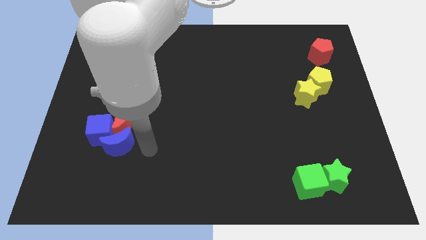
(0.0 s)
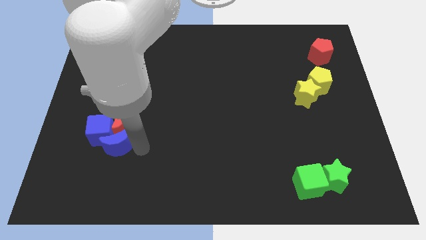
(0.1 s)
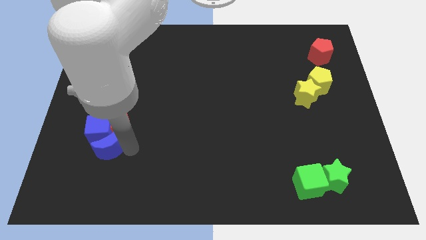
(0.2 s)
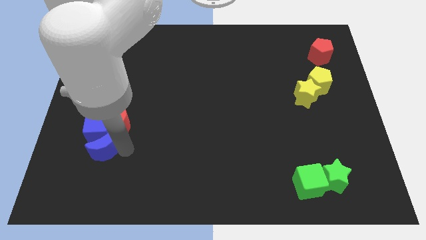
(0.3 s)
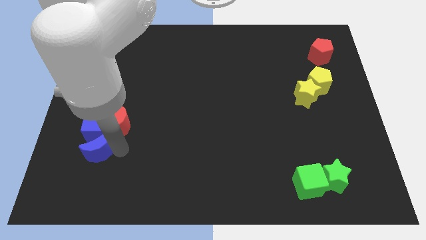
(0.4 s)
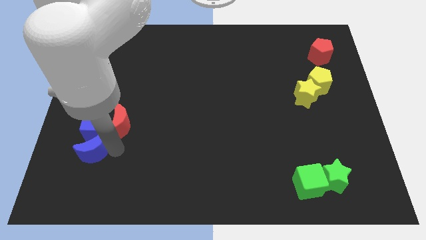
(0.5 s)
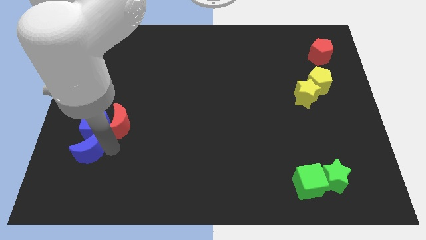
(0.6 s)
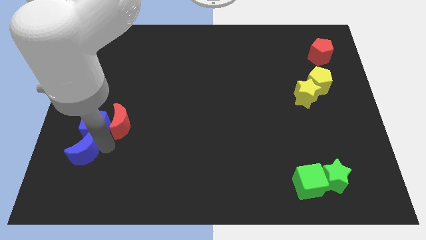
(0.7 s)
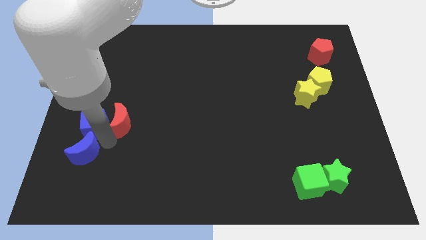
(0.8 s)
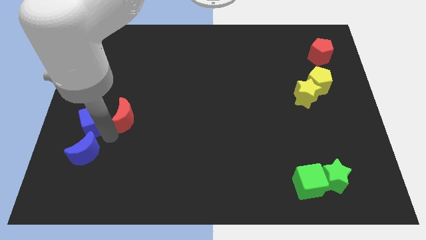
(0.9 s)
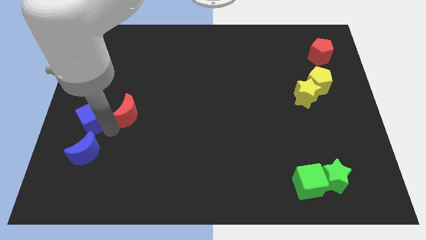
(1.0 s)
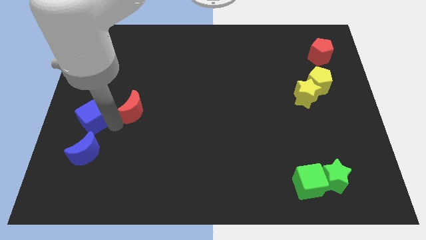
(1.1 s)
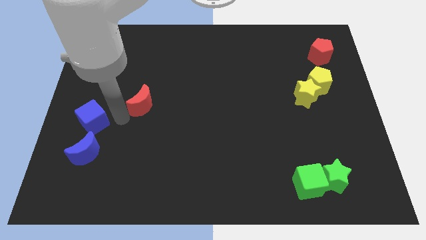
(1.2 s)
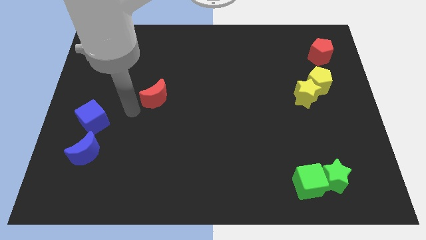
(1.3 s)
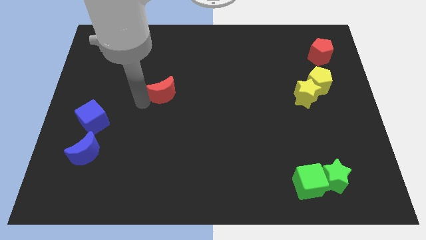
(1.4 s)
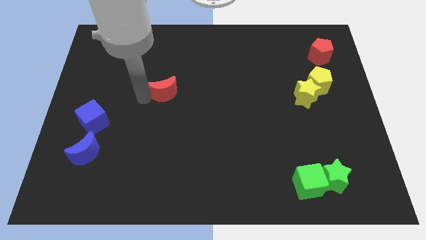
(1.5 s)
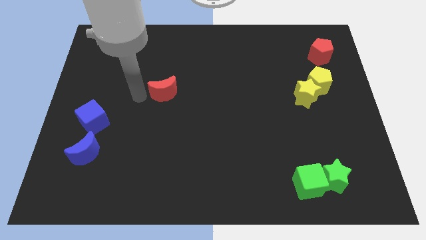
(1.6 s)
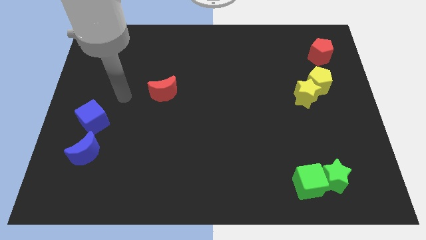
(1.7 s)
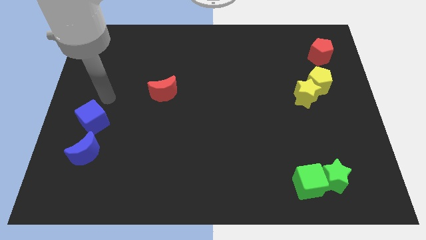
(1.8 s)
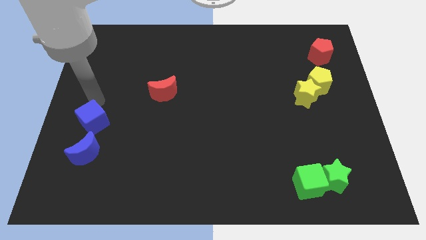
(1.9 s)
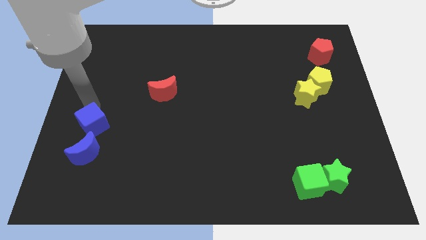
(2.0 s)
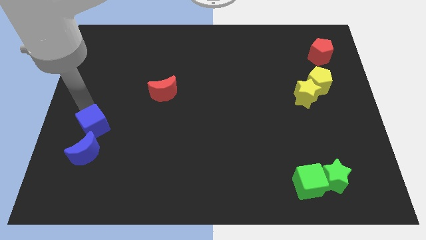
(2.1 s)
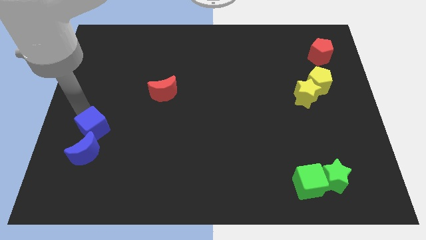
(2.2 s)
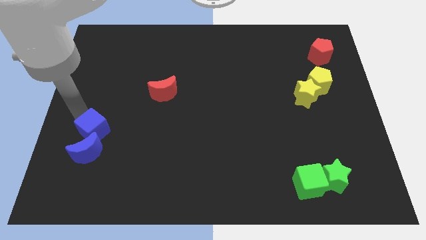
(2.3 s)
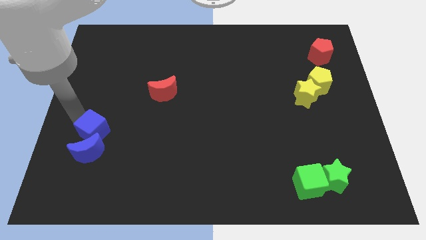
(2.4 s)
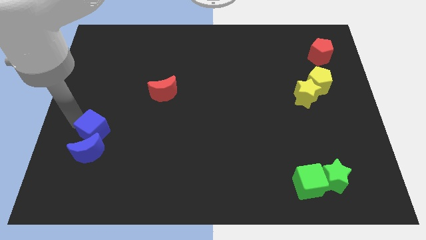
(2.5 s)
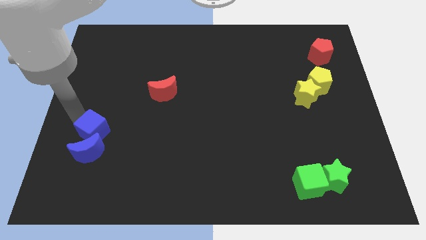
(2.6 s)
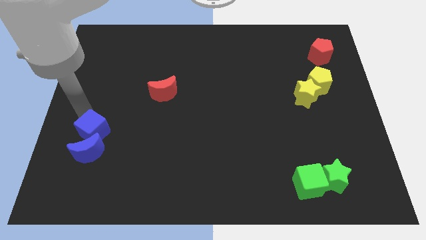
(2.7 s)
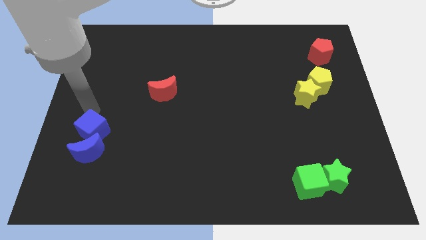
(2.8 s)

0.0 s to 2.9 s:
separate the red moon from the blue cube and blue crescent

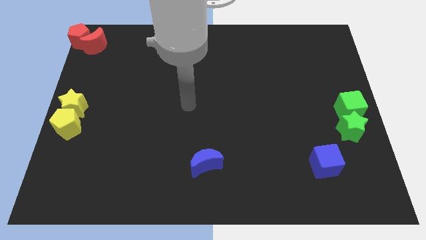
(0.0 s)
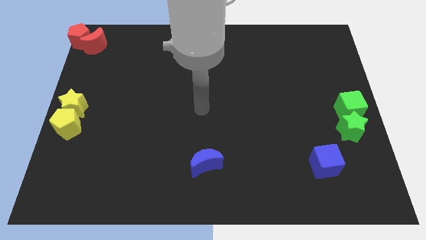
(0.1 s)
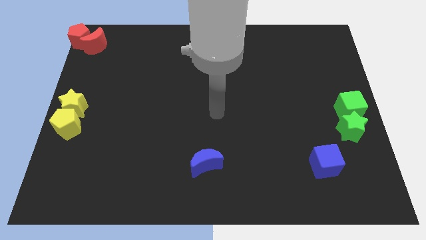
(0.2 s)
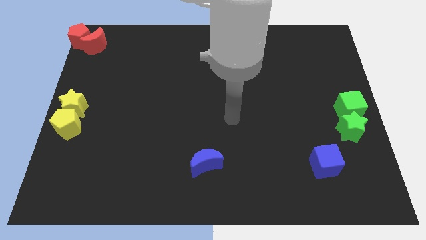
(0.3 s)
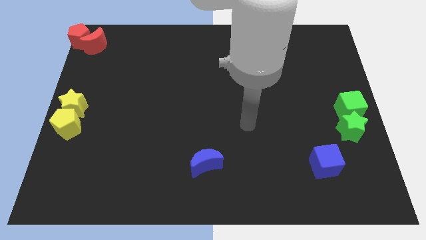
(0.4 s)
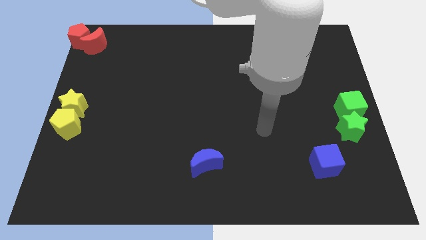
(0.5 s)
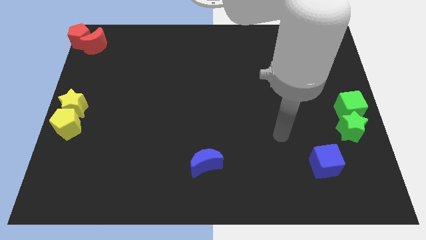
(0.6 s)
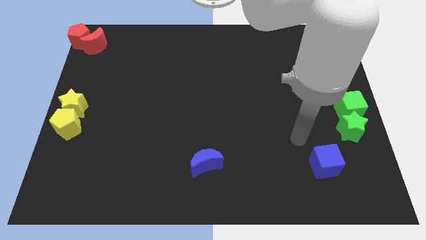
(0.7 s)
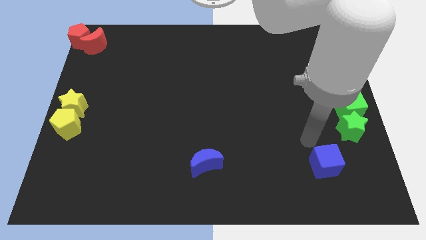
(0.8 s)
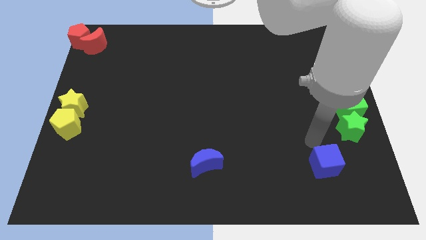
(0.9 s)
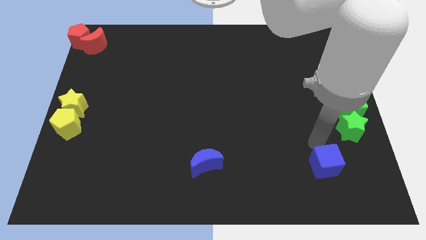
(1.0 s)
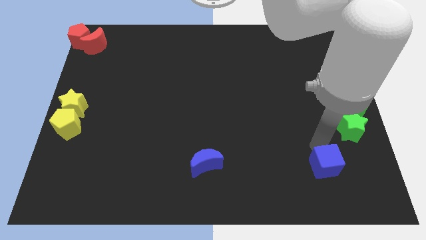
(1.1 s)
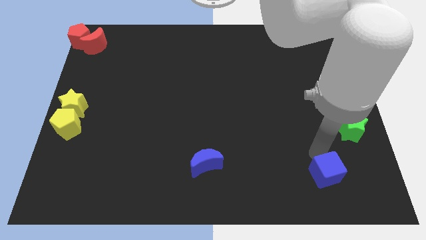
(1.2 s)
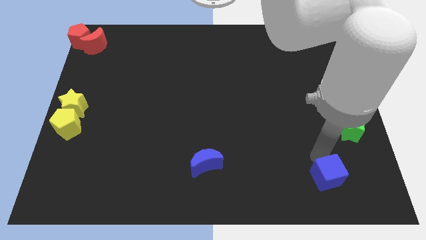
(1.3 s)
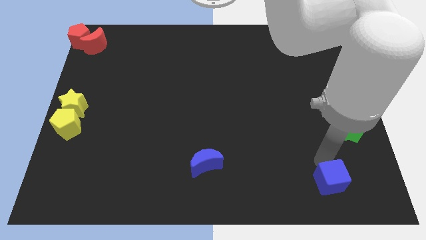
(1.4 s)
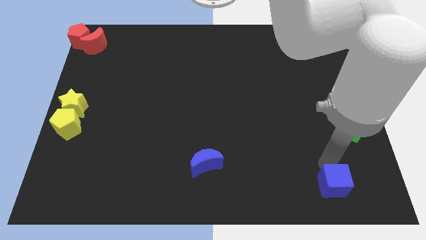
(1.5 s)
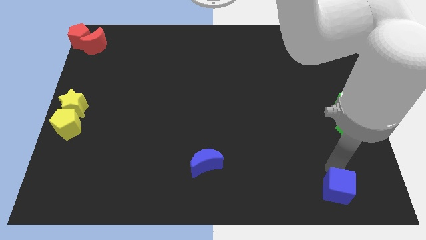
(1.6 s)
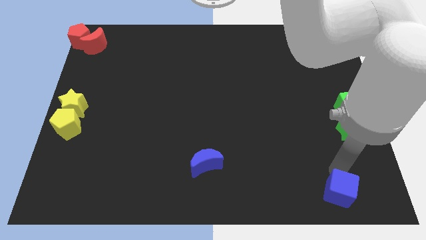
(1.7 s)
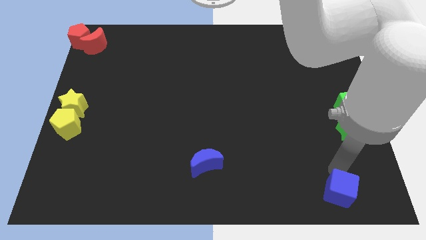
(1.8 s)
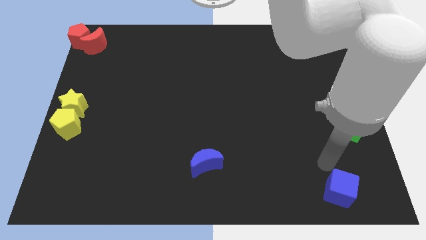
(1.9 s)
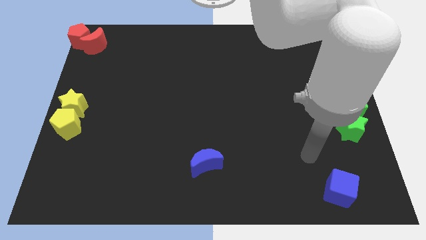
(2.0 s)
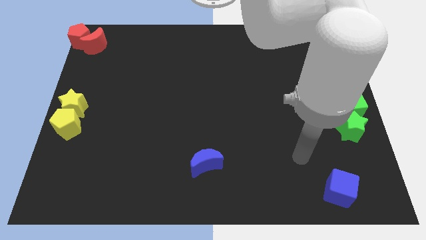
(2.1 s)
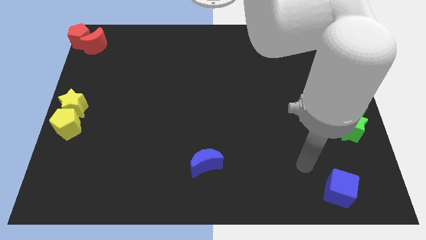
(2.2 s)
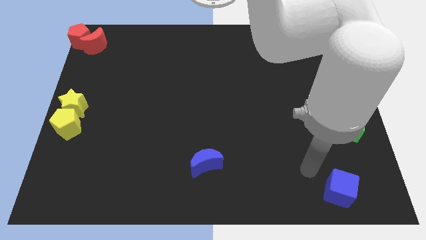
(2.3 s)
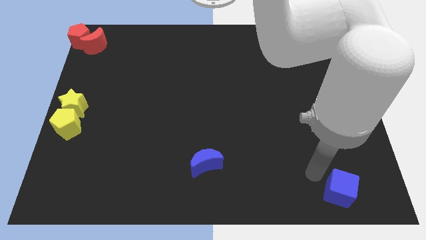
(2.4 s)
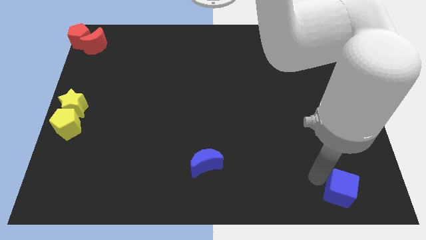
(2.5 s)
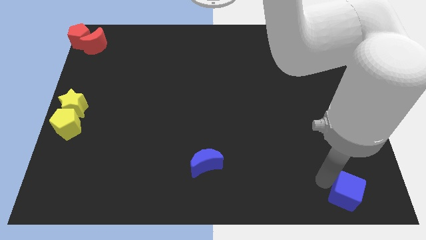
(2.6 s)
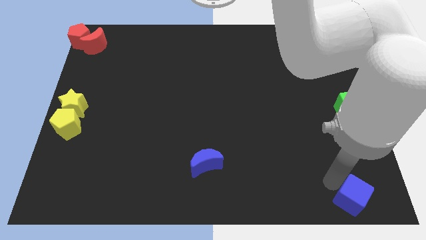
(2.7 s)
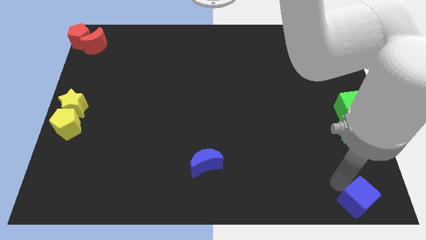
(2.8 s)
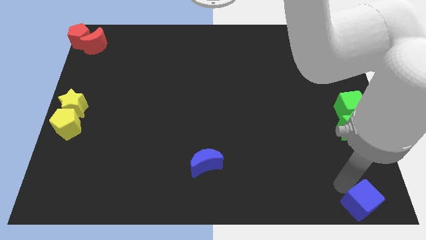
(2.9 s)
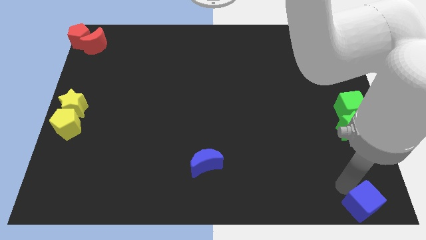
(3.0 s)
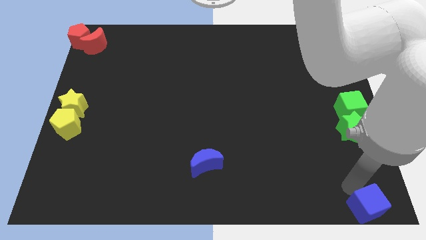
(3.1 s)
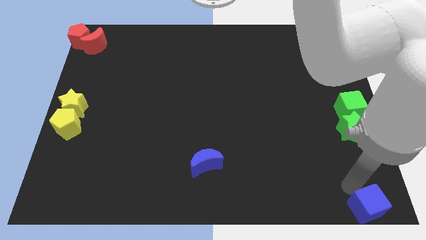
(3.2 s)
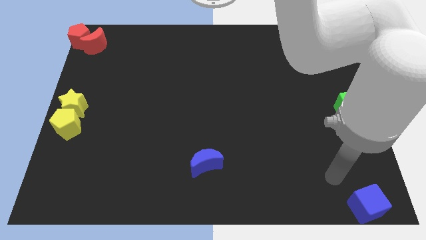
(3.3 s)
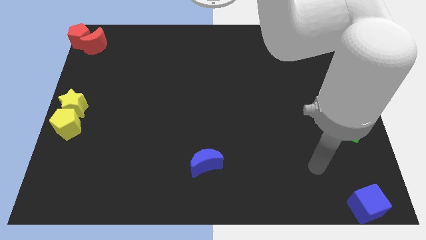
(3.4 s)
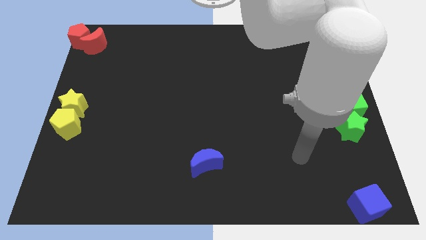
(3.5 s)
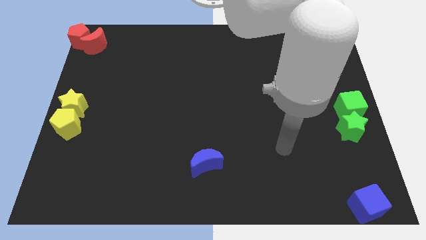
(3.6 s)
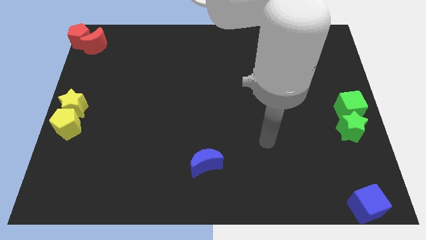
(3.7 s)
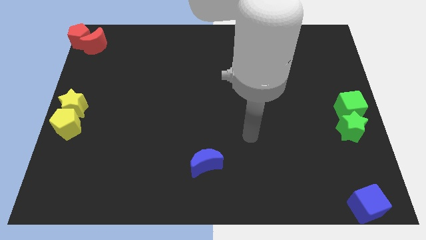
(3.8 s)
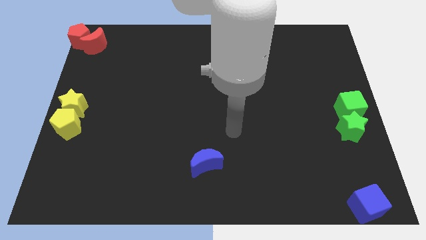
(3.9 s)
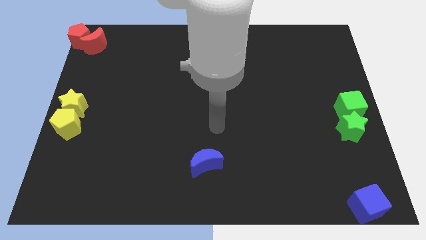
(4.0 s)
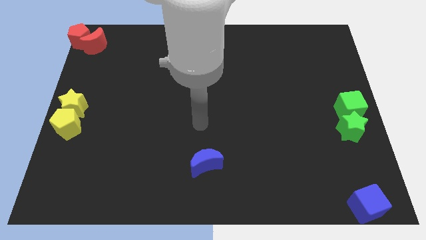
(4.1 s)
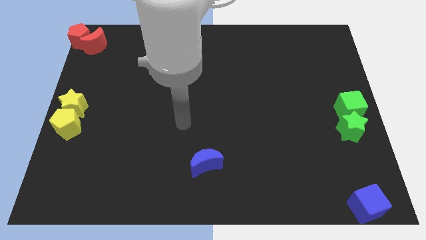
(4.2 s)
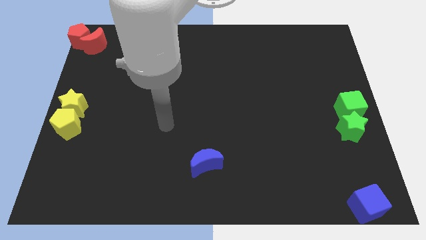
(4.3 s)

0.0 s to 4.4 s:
drag the blue cube to the bottom right of the board

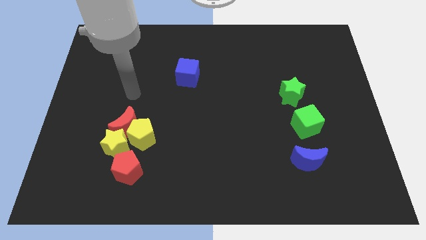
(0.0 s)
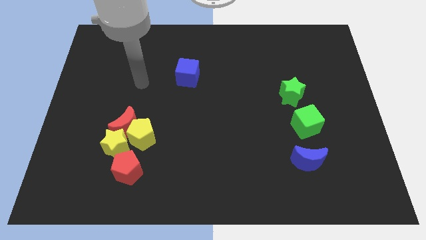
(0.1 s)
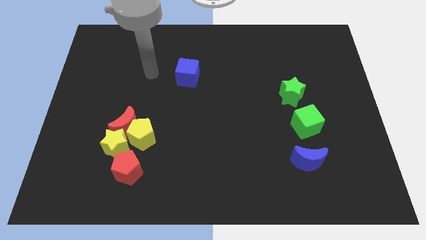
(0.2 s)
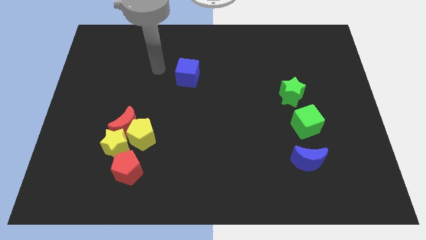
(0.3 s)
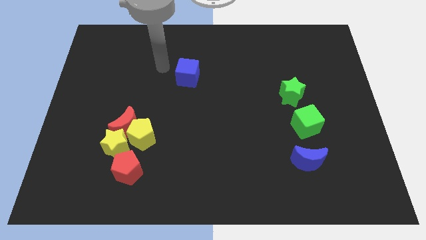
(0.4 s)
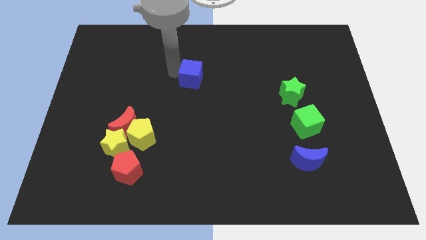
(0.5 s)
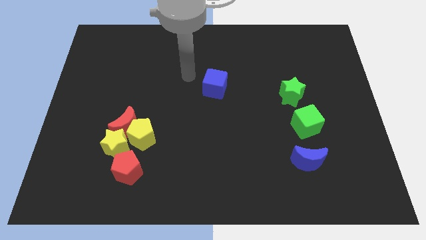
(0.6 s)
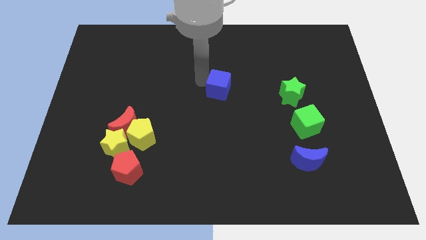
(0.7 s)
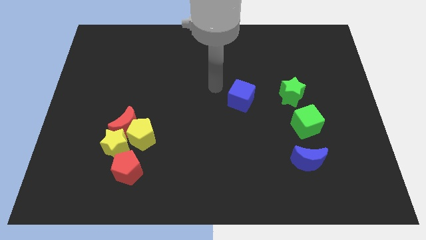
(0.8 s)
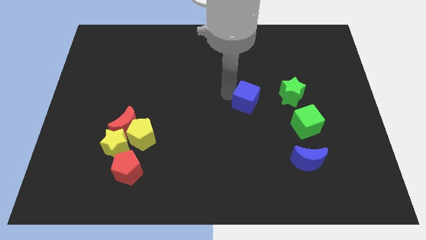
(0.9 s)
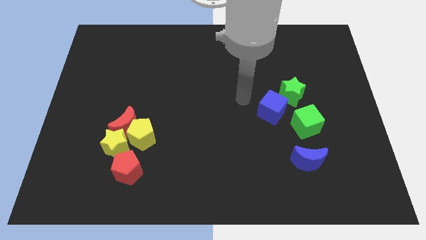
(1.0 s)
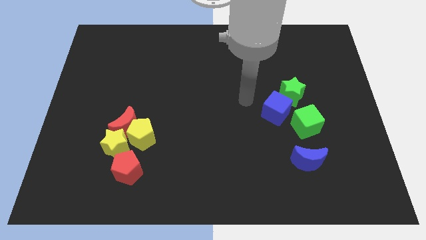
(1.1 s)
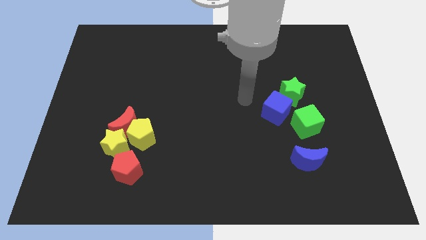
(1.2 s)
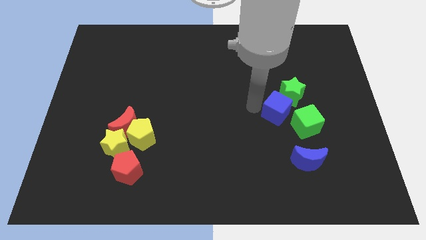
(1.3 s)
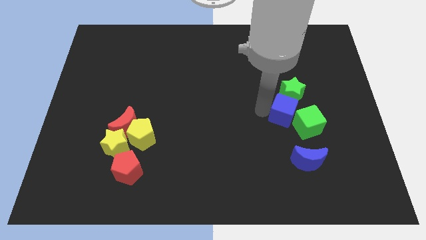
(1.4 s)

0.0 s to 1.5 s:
push the blue cube into the green cube

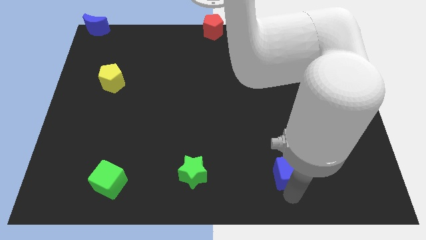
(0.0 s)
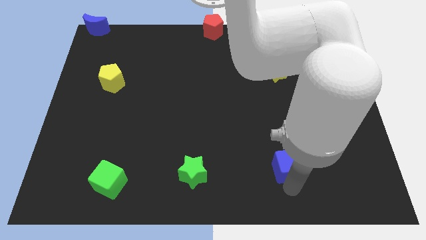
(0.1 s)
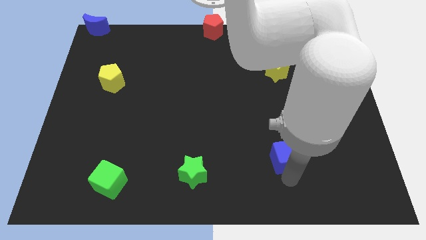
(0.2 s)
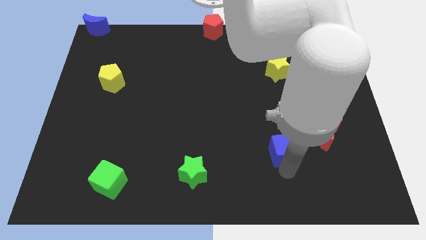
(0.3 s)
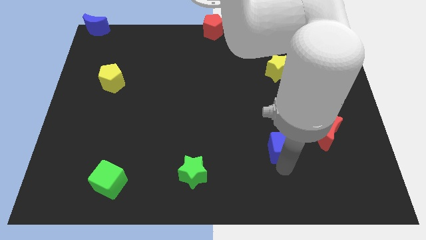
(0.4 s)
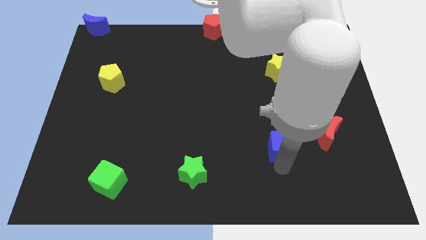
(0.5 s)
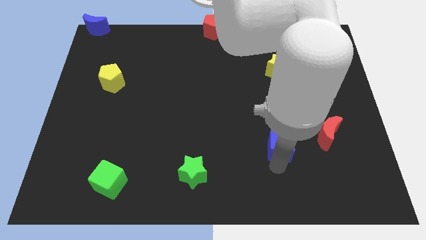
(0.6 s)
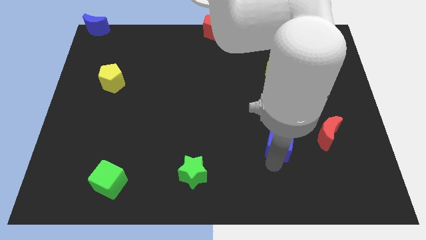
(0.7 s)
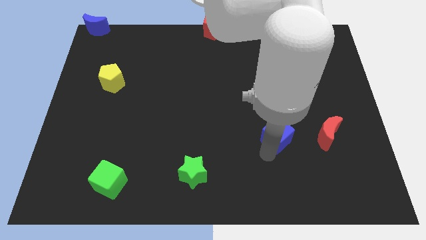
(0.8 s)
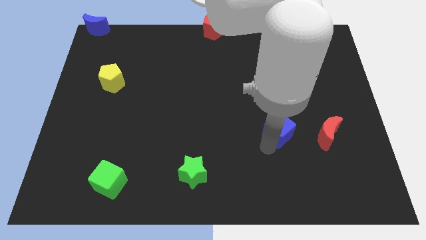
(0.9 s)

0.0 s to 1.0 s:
place the blue cube parallel red moon
